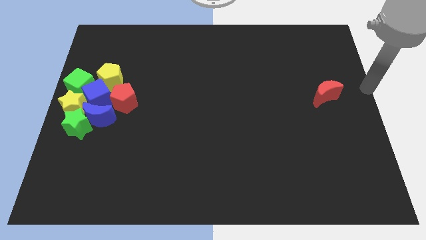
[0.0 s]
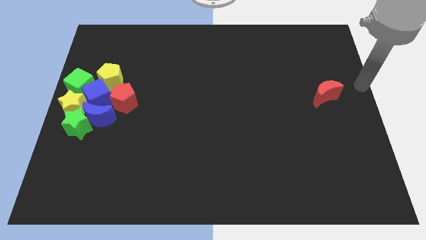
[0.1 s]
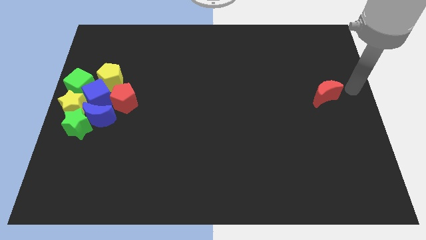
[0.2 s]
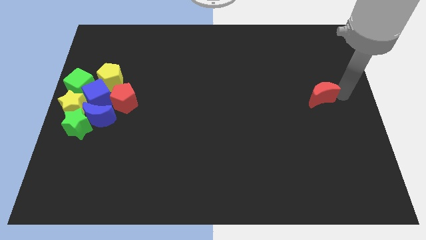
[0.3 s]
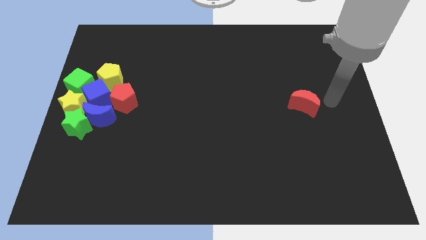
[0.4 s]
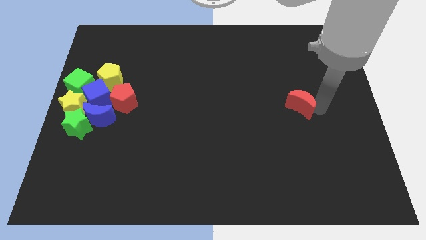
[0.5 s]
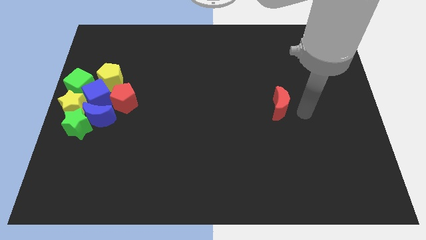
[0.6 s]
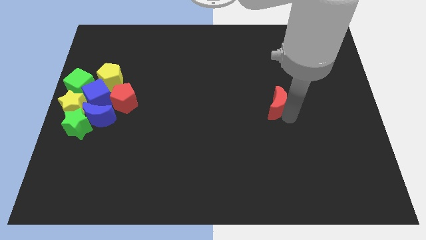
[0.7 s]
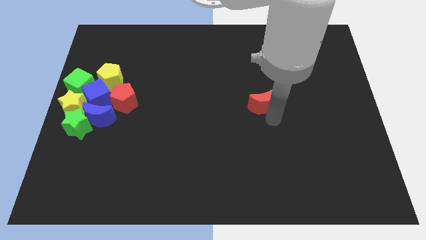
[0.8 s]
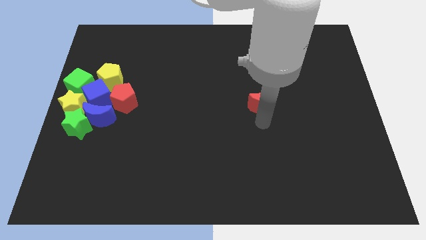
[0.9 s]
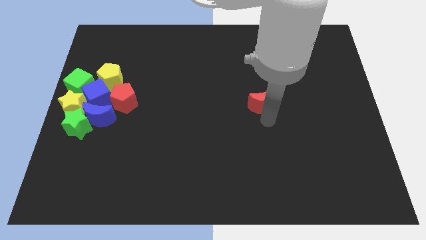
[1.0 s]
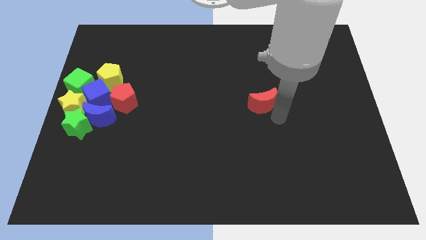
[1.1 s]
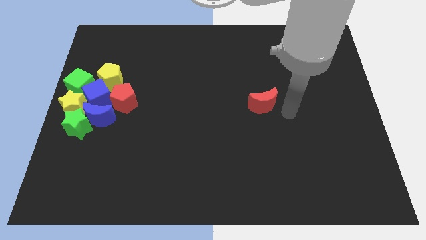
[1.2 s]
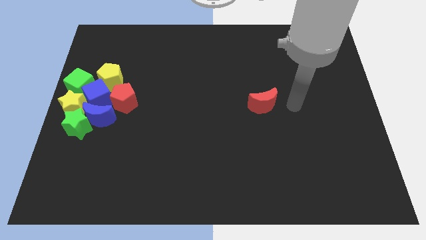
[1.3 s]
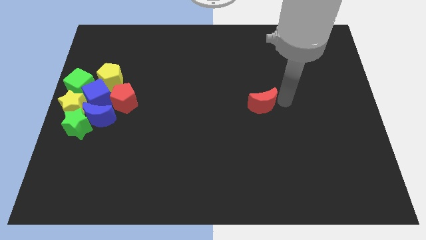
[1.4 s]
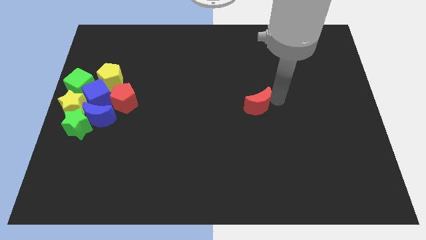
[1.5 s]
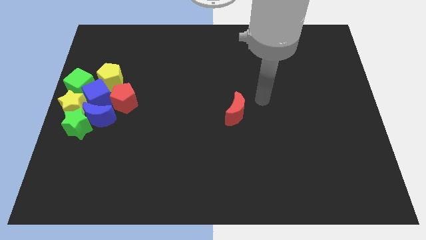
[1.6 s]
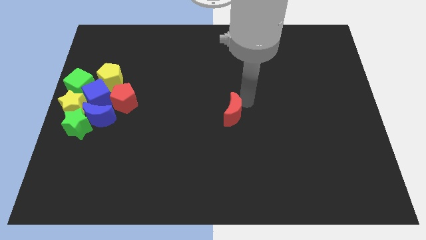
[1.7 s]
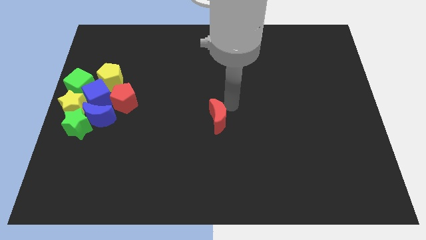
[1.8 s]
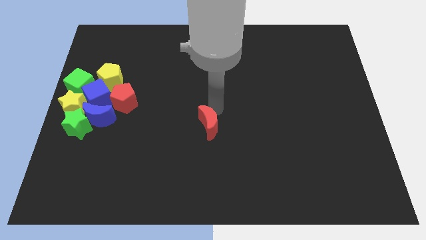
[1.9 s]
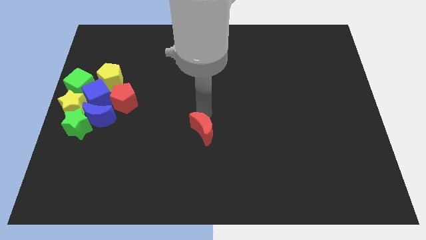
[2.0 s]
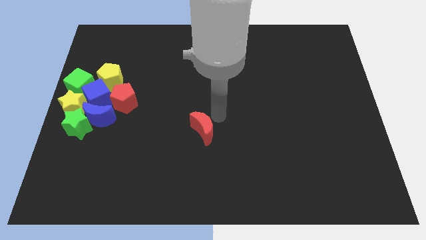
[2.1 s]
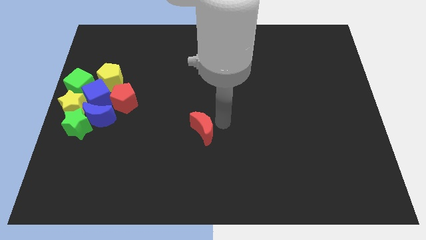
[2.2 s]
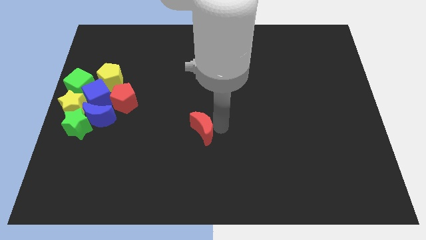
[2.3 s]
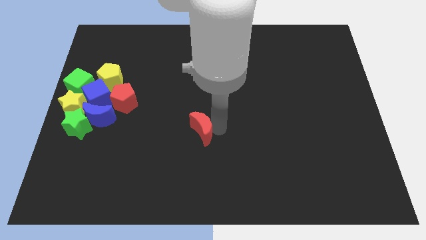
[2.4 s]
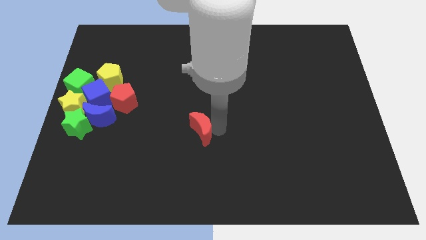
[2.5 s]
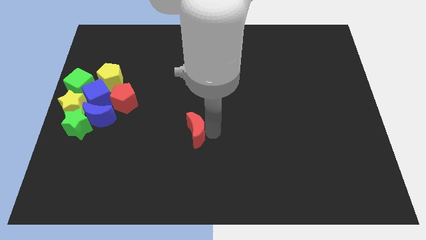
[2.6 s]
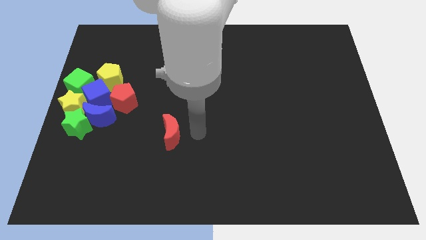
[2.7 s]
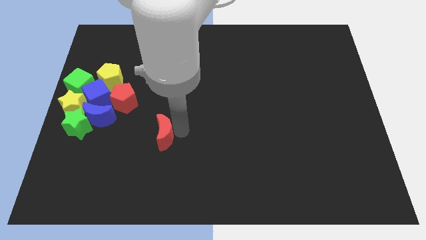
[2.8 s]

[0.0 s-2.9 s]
push the red crescent to the bottom right of the red pentagon

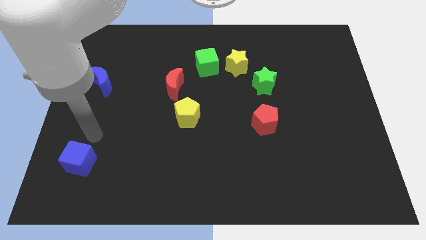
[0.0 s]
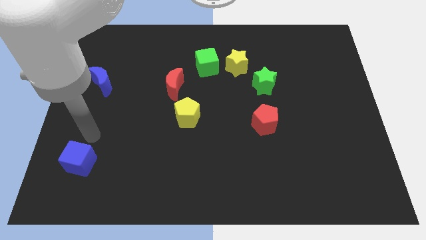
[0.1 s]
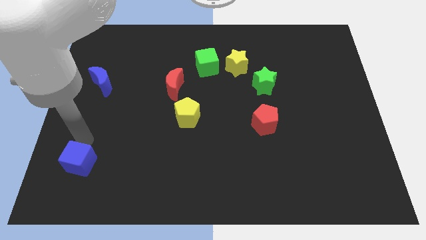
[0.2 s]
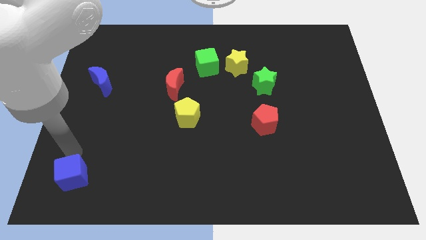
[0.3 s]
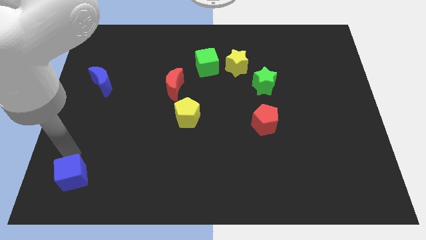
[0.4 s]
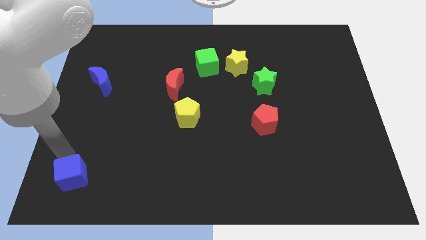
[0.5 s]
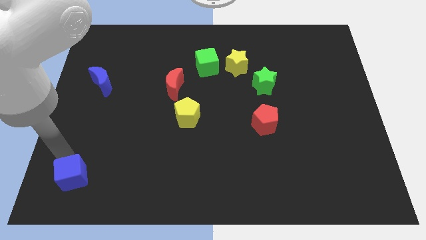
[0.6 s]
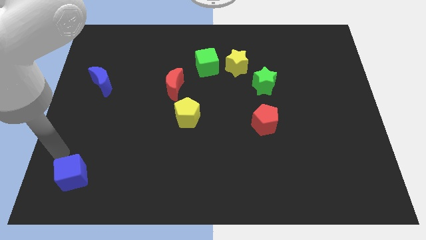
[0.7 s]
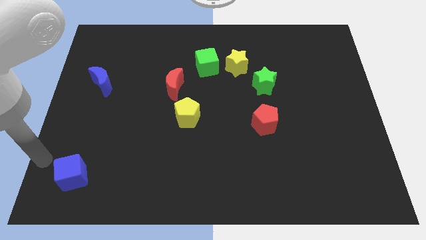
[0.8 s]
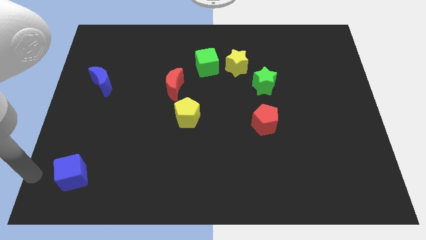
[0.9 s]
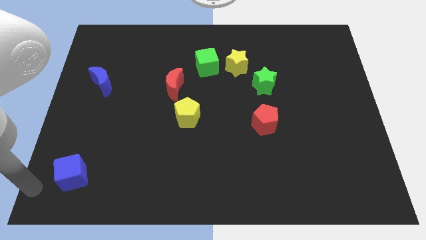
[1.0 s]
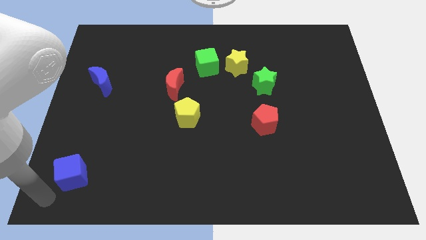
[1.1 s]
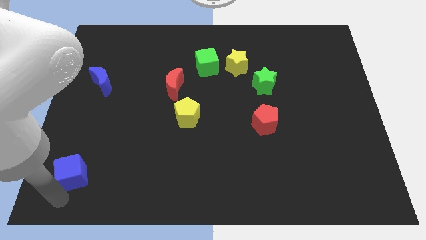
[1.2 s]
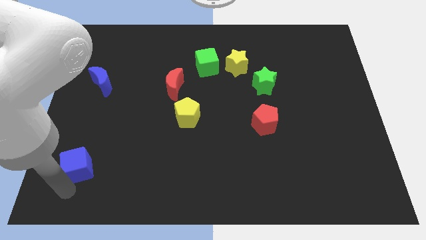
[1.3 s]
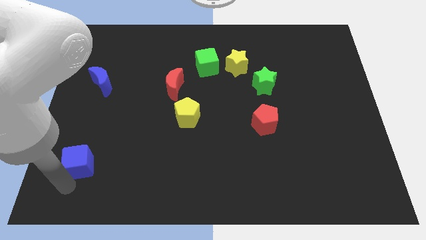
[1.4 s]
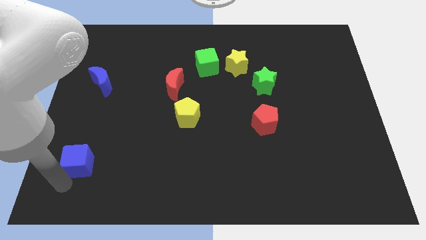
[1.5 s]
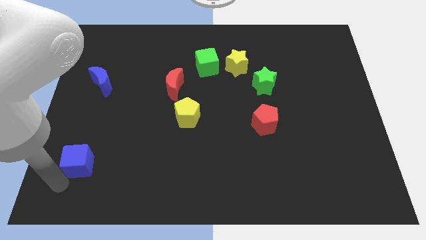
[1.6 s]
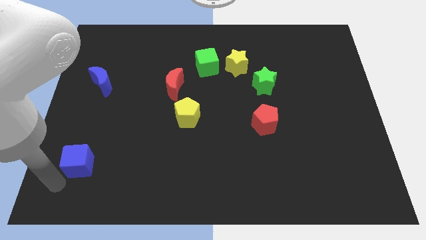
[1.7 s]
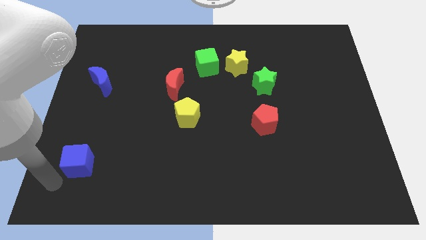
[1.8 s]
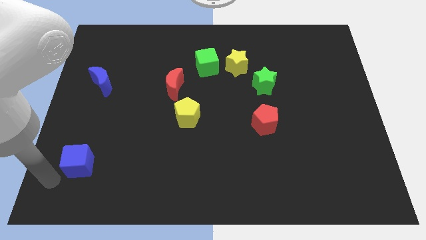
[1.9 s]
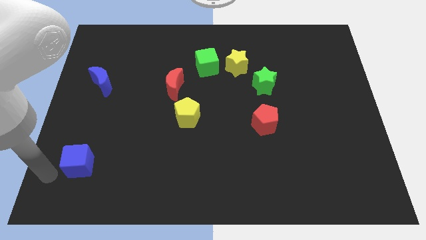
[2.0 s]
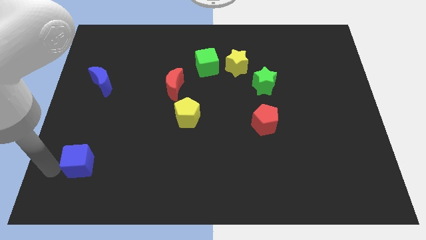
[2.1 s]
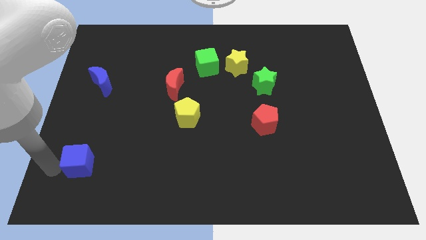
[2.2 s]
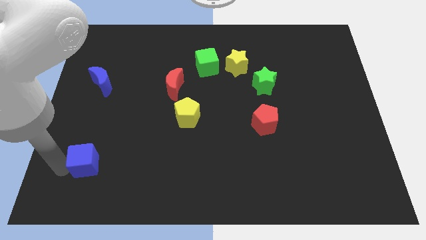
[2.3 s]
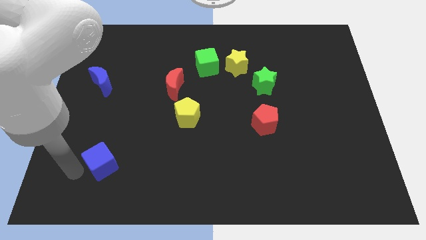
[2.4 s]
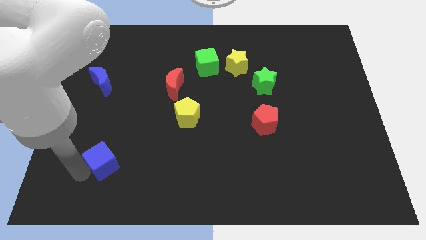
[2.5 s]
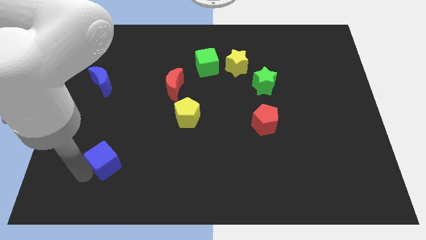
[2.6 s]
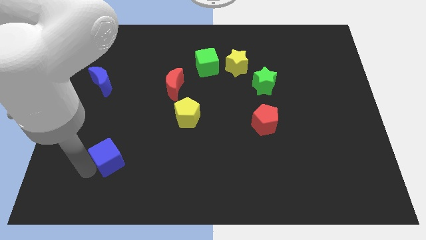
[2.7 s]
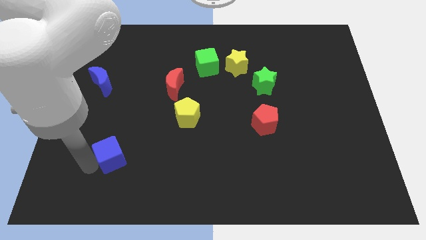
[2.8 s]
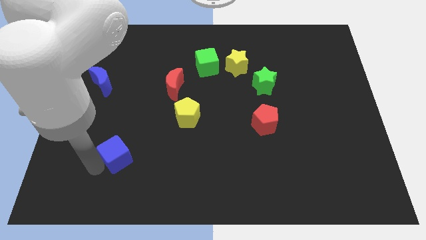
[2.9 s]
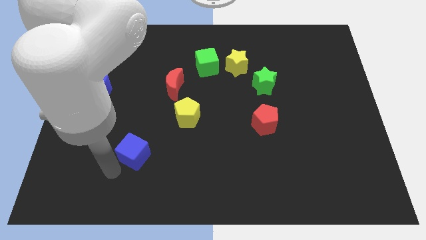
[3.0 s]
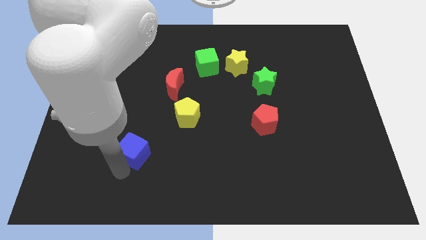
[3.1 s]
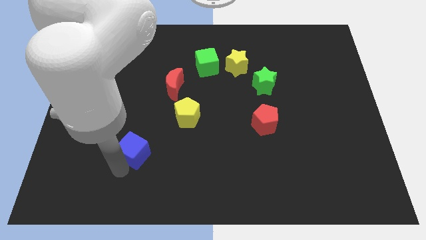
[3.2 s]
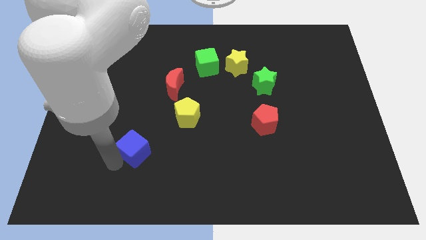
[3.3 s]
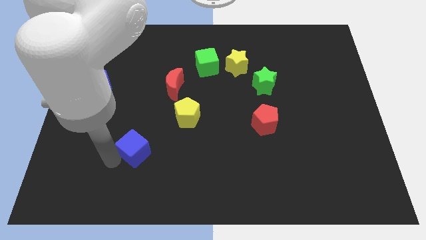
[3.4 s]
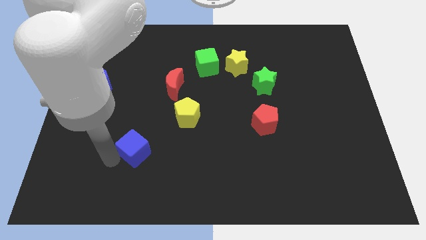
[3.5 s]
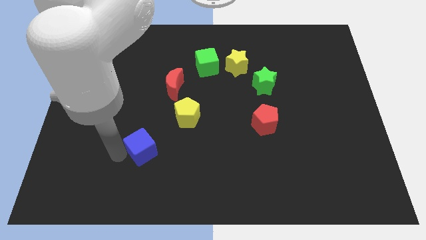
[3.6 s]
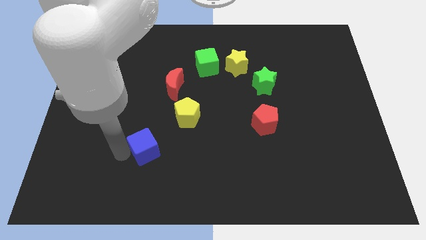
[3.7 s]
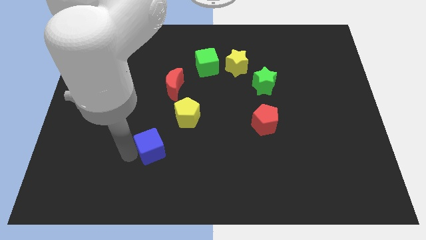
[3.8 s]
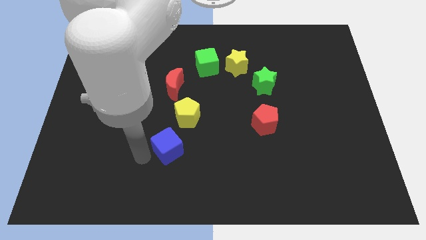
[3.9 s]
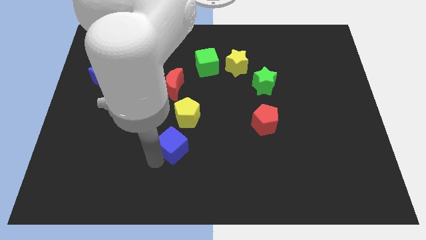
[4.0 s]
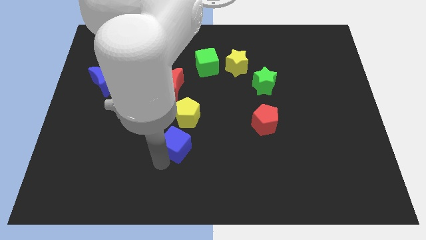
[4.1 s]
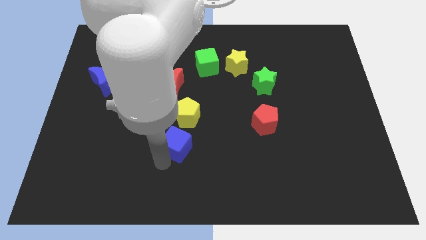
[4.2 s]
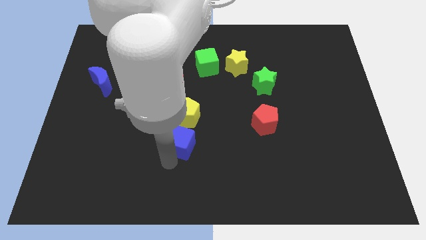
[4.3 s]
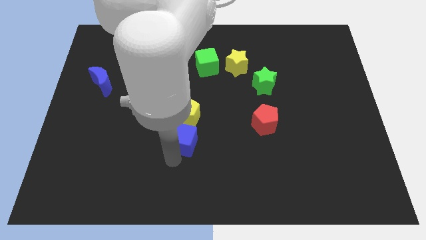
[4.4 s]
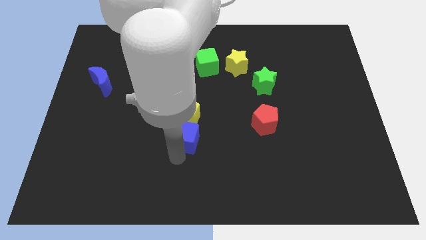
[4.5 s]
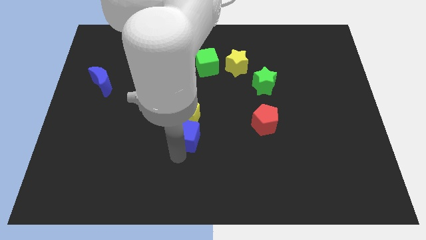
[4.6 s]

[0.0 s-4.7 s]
move the blue cube close to the bottom side of the yellow pentagon

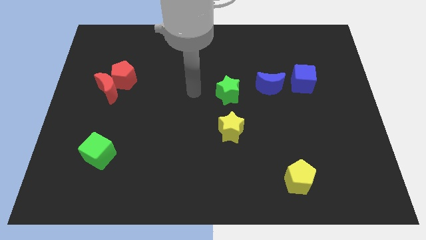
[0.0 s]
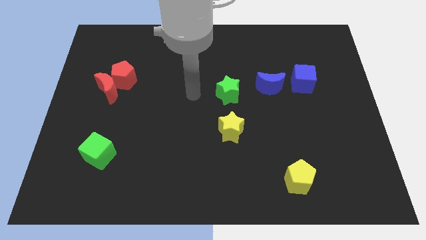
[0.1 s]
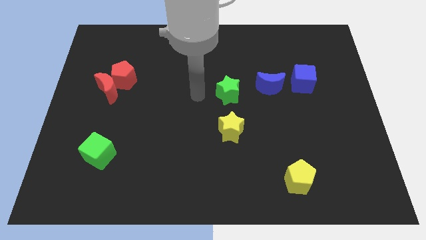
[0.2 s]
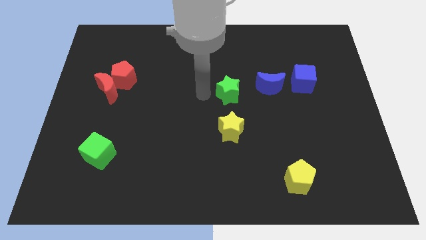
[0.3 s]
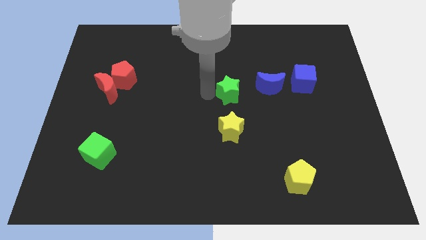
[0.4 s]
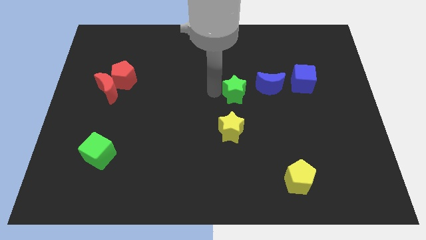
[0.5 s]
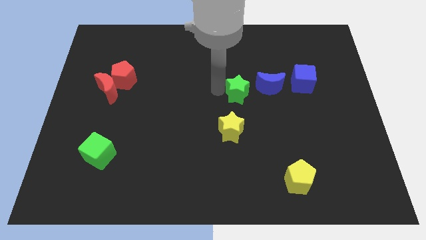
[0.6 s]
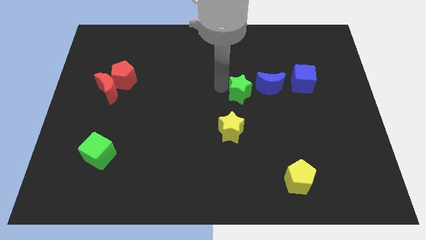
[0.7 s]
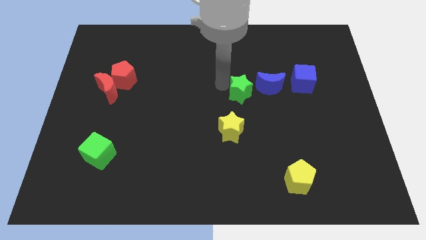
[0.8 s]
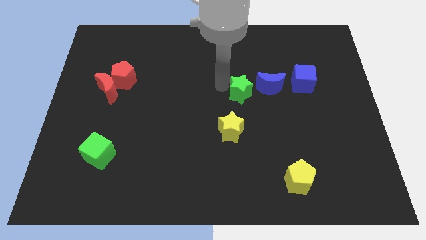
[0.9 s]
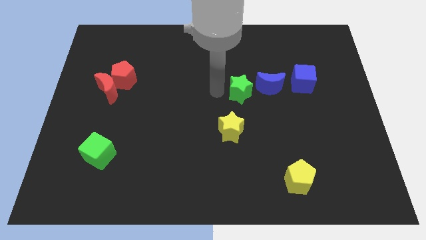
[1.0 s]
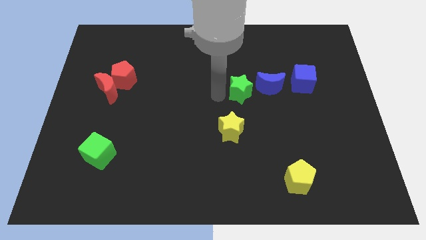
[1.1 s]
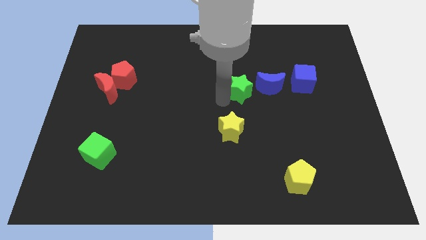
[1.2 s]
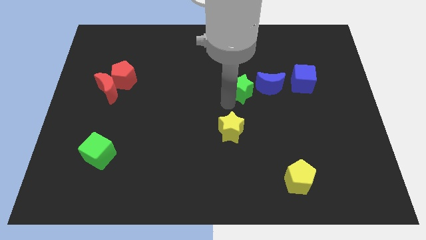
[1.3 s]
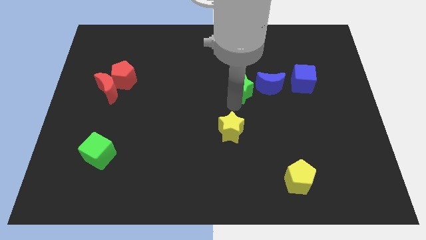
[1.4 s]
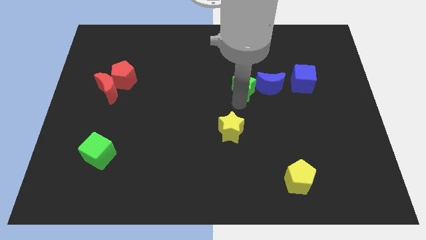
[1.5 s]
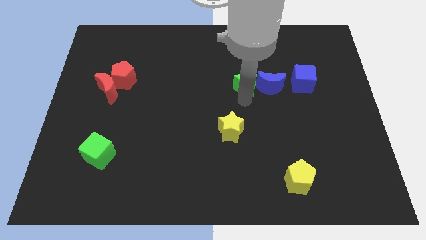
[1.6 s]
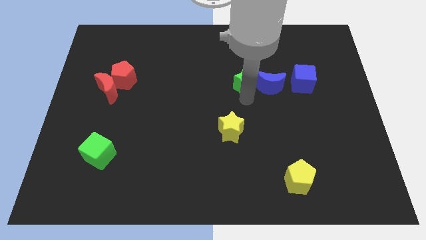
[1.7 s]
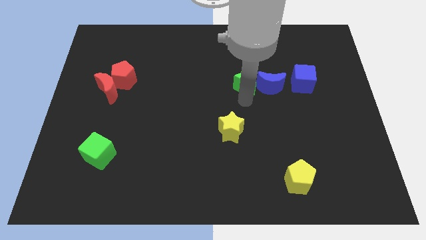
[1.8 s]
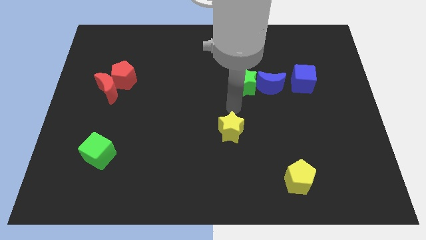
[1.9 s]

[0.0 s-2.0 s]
put the green star to the left side of the blue crescent
